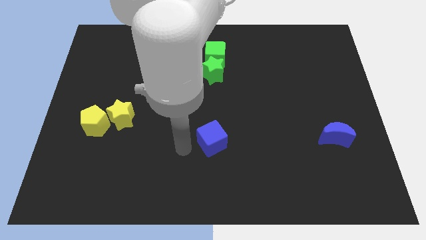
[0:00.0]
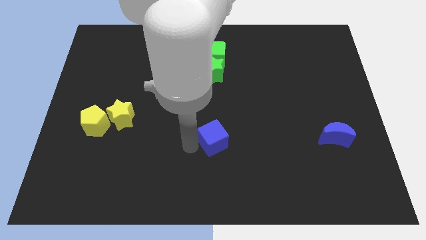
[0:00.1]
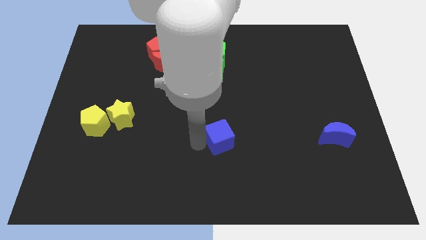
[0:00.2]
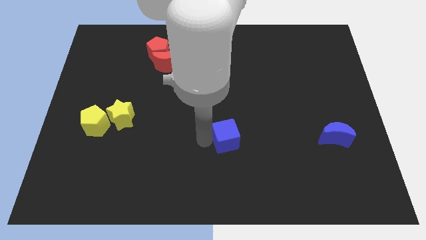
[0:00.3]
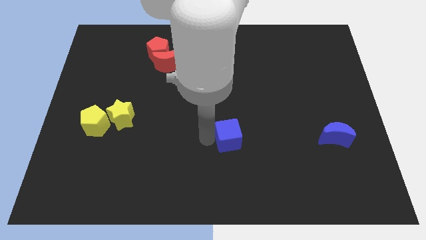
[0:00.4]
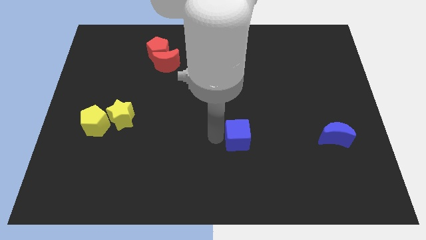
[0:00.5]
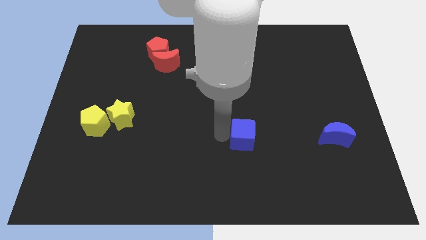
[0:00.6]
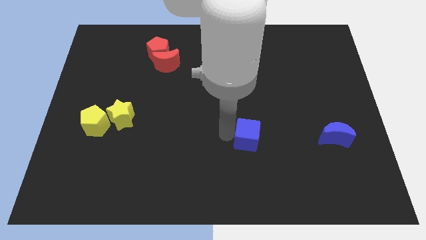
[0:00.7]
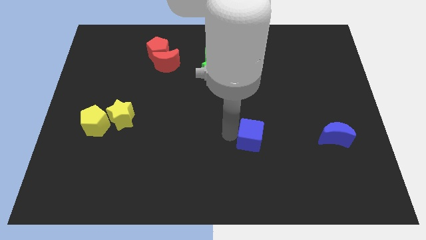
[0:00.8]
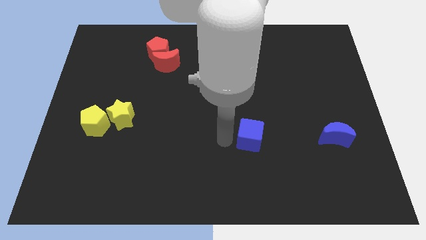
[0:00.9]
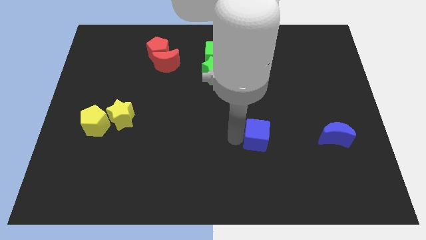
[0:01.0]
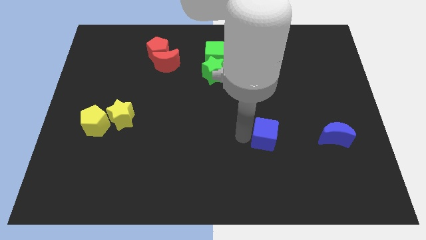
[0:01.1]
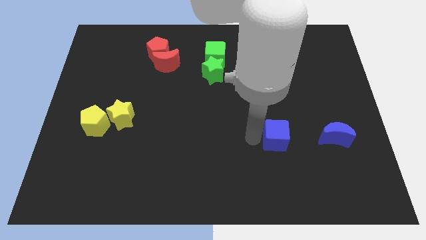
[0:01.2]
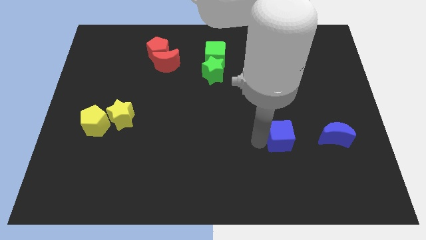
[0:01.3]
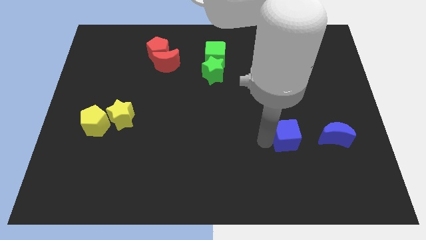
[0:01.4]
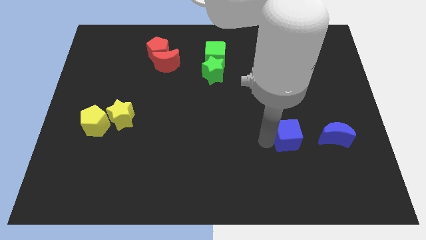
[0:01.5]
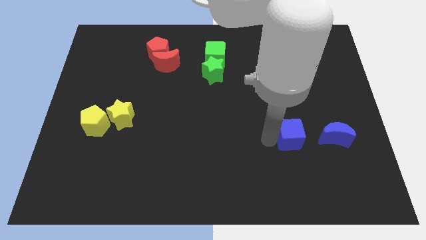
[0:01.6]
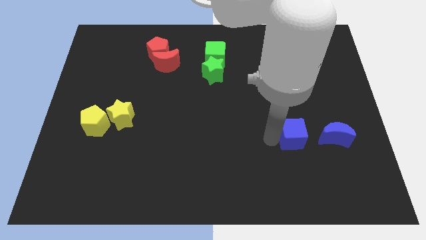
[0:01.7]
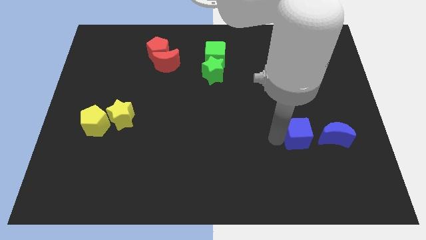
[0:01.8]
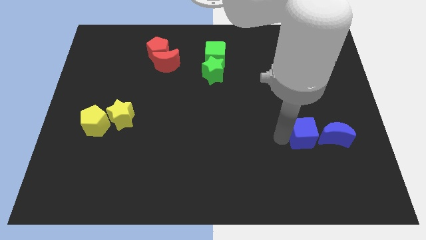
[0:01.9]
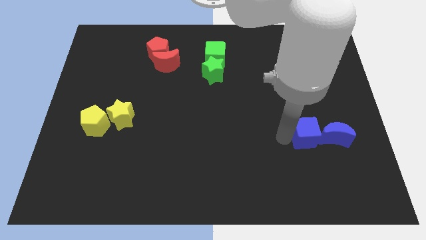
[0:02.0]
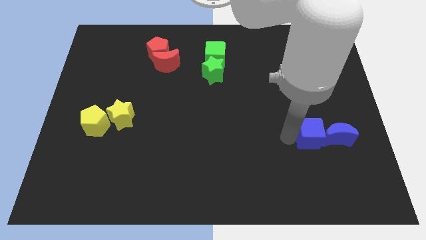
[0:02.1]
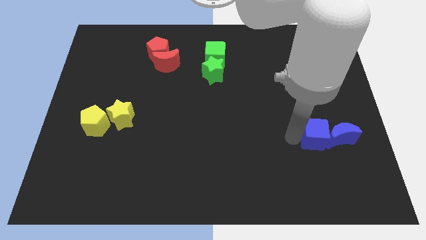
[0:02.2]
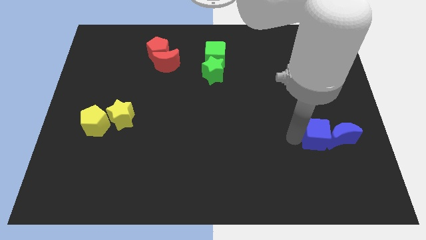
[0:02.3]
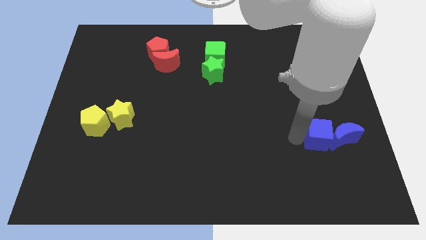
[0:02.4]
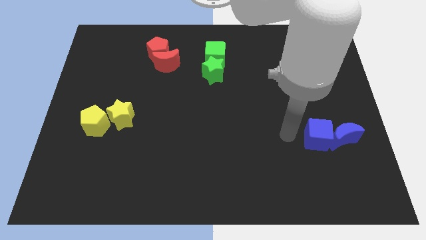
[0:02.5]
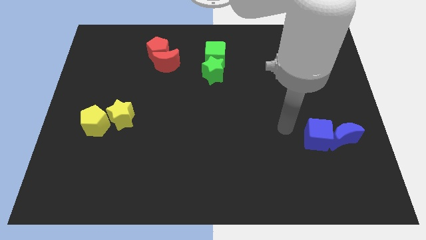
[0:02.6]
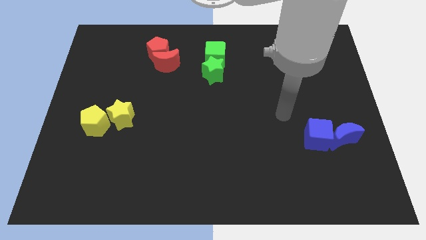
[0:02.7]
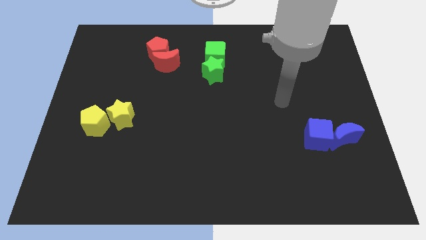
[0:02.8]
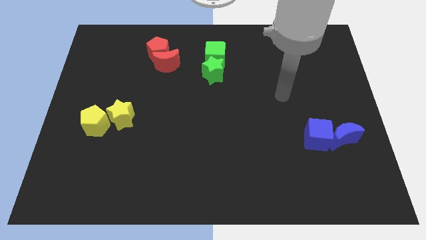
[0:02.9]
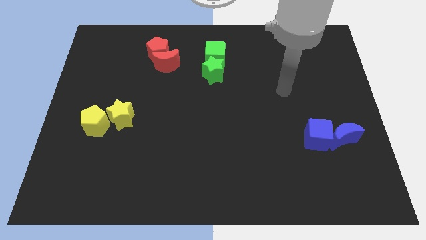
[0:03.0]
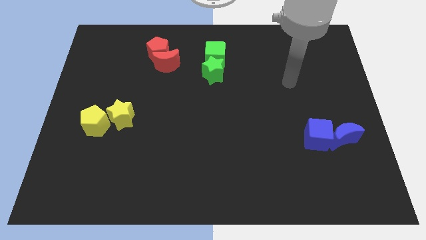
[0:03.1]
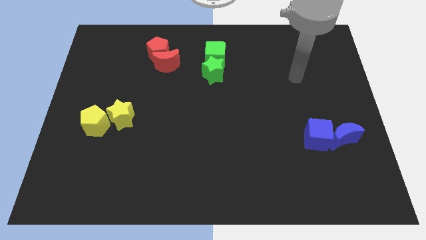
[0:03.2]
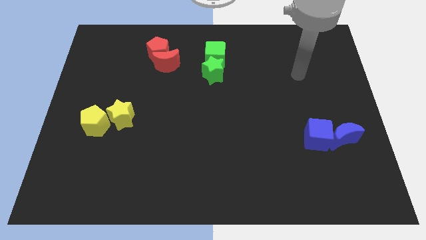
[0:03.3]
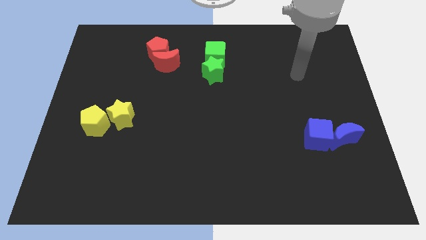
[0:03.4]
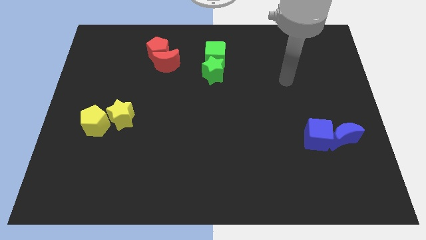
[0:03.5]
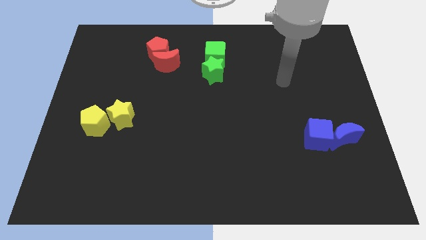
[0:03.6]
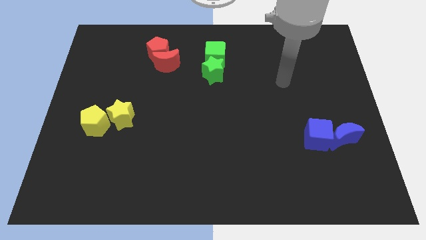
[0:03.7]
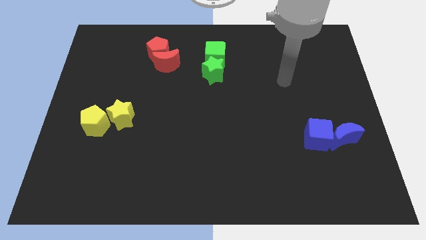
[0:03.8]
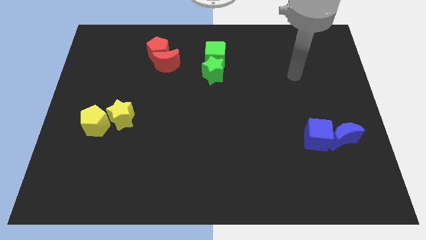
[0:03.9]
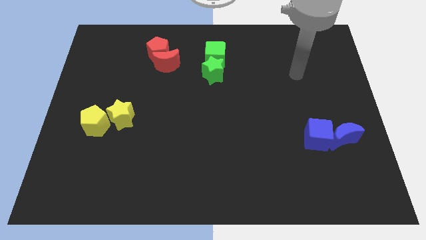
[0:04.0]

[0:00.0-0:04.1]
push the blue cube into the blue moon

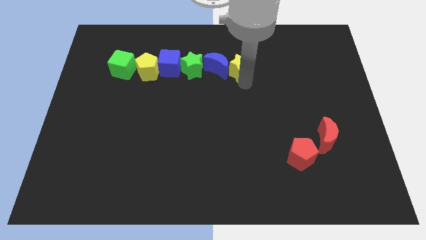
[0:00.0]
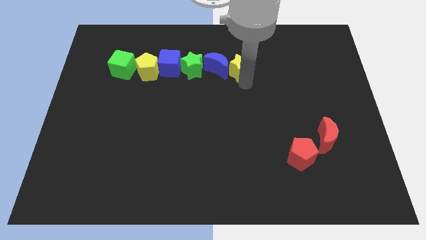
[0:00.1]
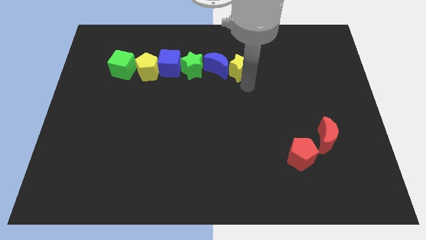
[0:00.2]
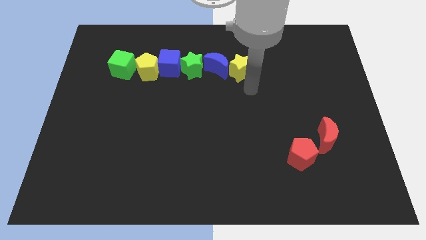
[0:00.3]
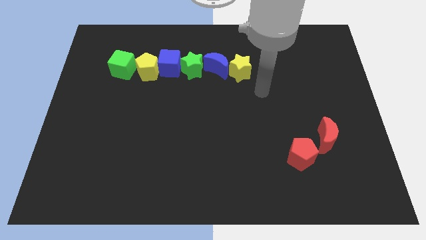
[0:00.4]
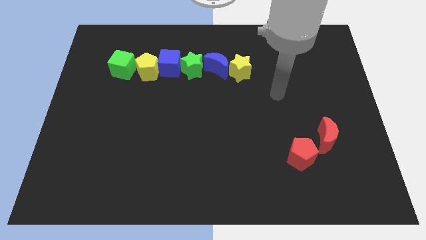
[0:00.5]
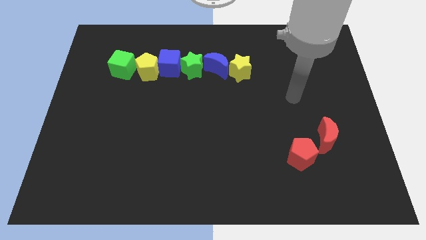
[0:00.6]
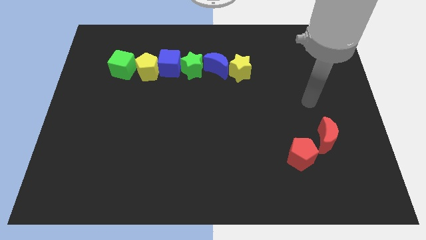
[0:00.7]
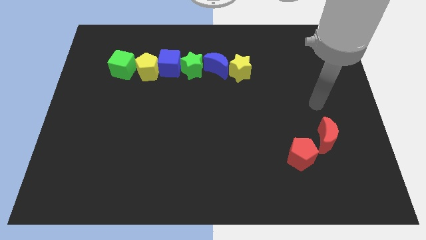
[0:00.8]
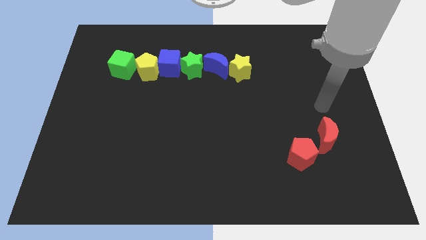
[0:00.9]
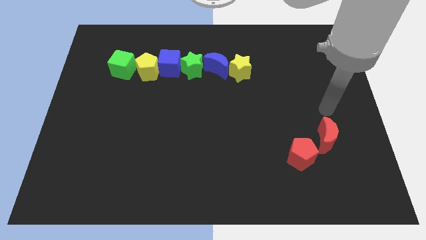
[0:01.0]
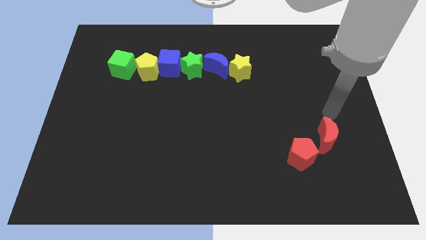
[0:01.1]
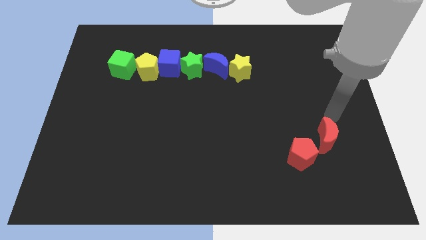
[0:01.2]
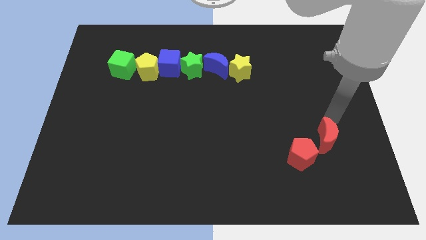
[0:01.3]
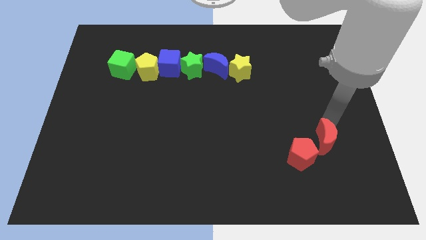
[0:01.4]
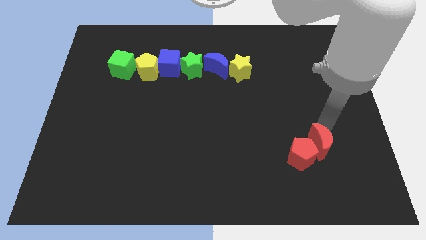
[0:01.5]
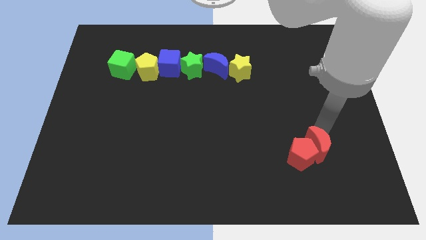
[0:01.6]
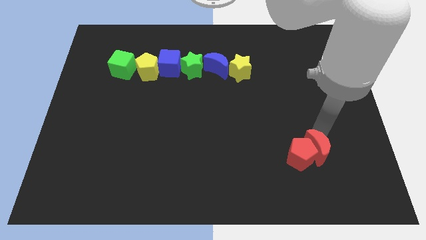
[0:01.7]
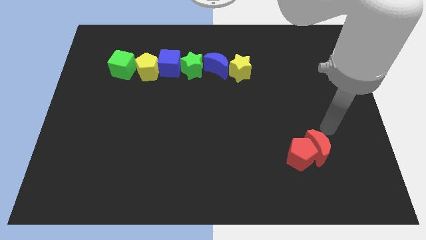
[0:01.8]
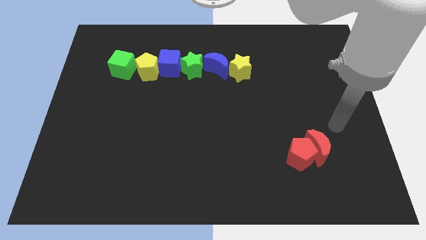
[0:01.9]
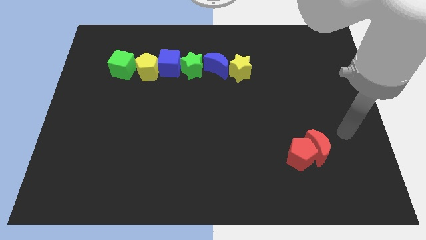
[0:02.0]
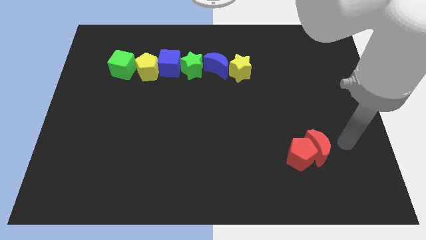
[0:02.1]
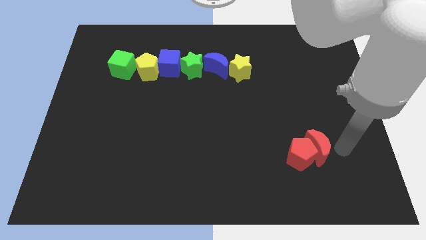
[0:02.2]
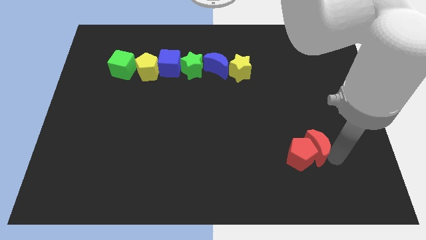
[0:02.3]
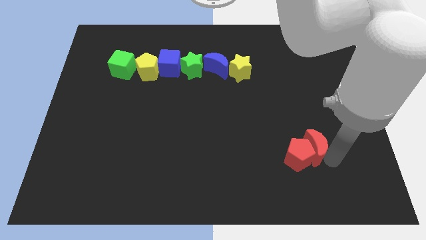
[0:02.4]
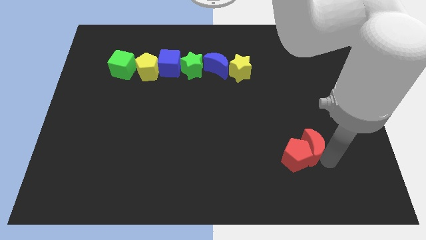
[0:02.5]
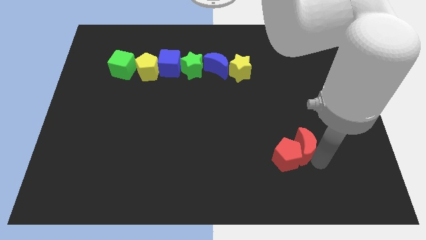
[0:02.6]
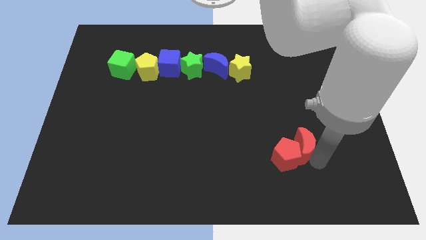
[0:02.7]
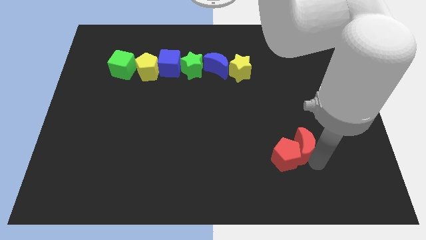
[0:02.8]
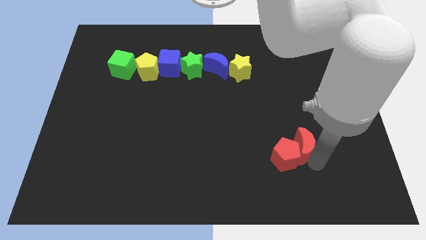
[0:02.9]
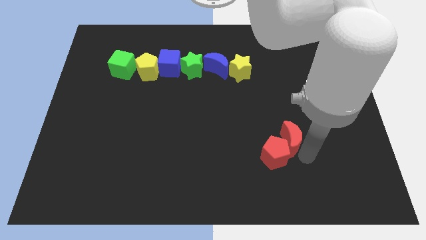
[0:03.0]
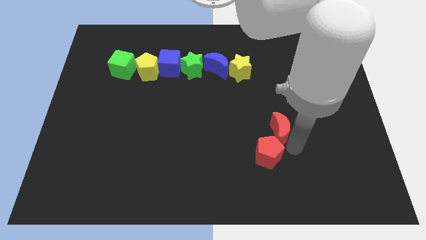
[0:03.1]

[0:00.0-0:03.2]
move the red moon into the red pentagon

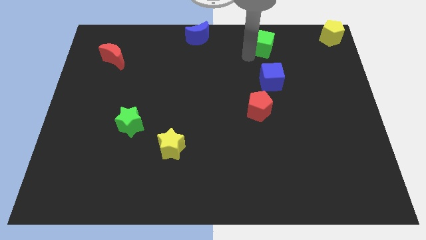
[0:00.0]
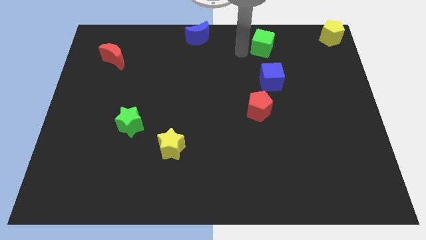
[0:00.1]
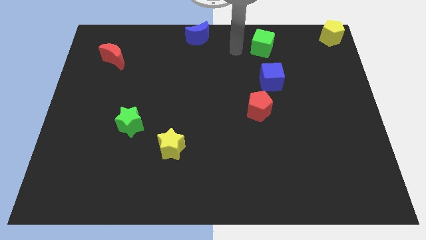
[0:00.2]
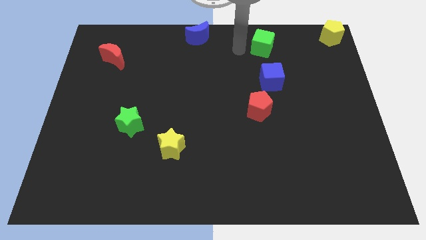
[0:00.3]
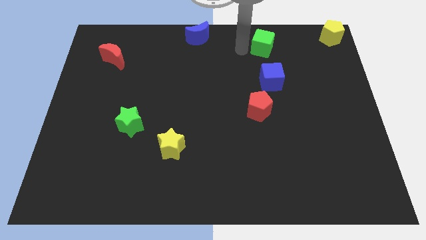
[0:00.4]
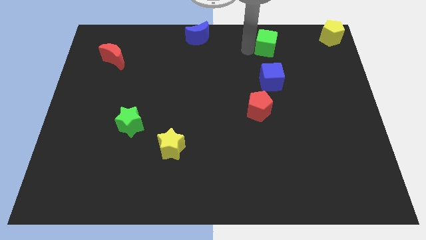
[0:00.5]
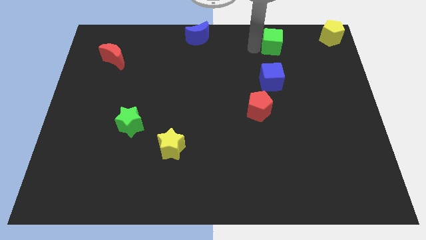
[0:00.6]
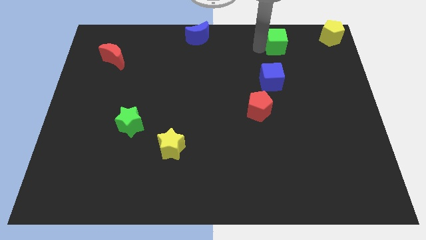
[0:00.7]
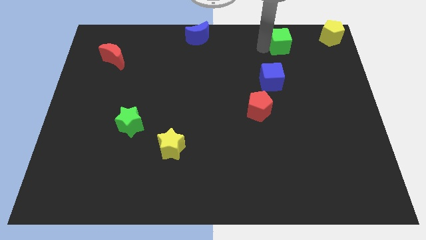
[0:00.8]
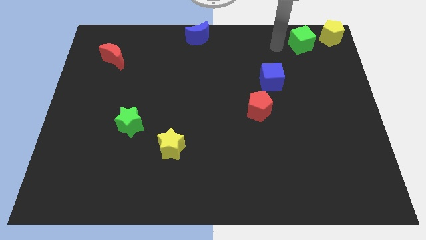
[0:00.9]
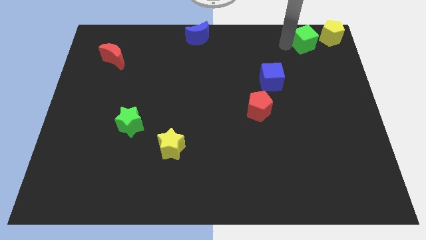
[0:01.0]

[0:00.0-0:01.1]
move green cube towards the yellow pentagon

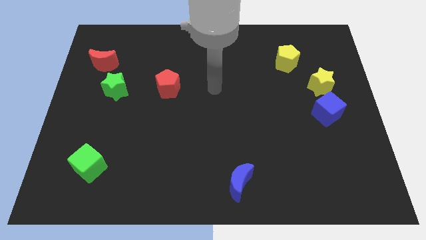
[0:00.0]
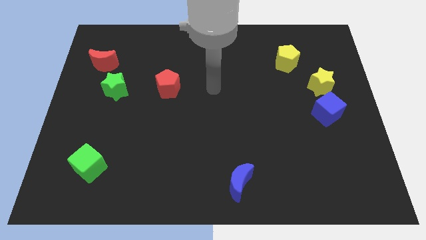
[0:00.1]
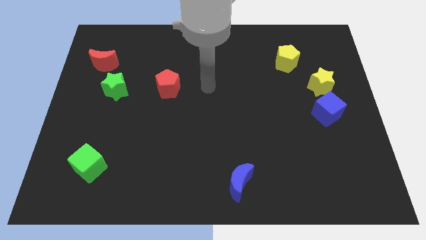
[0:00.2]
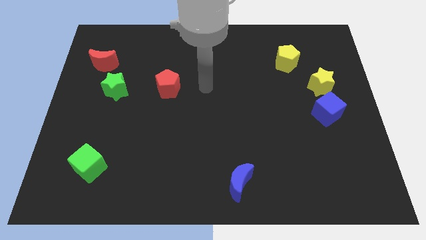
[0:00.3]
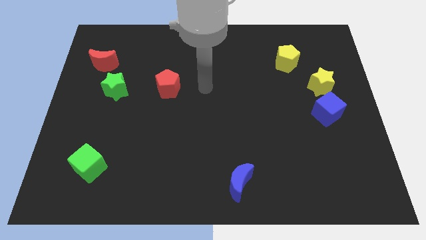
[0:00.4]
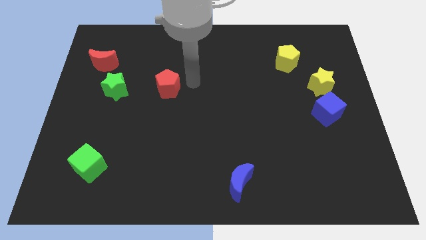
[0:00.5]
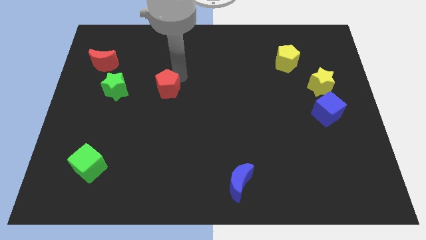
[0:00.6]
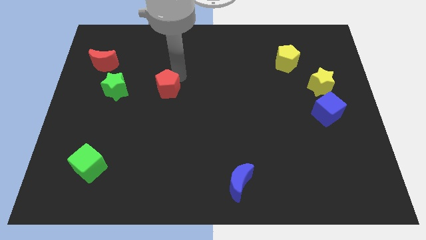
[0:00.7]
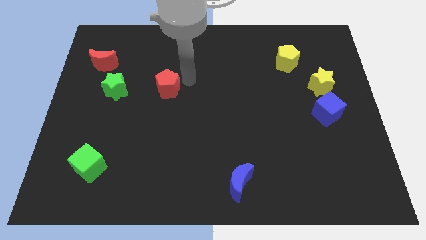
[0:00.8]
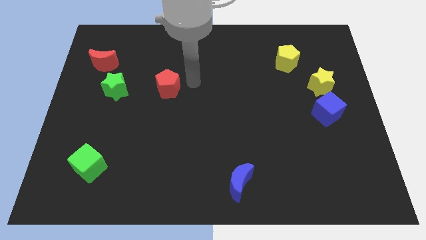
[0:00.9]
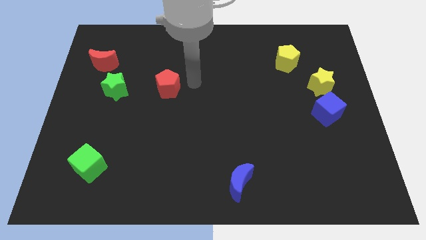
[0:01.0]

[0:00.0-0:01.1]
slide your arm to the right of red pentagon
